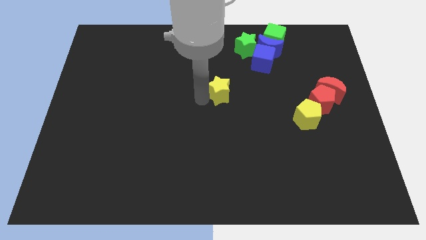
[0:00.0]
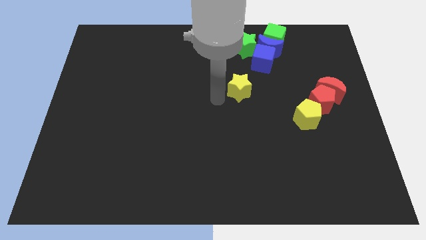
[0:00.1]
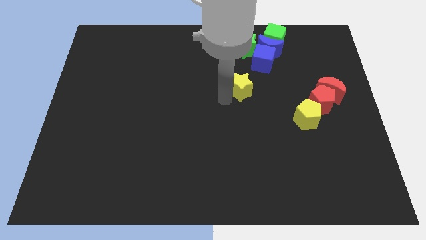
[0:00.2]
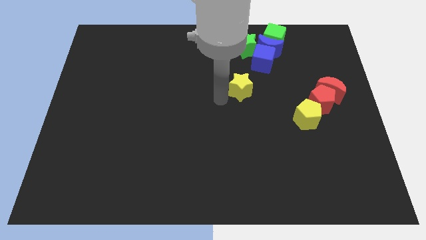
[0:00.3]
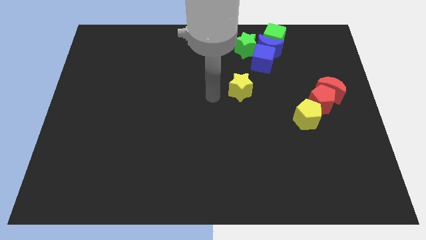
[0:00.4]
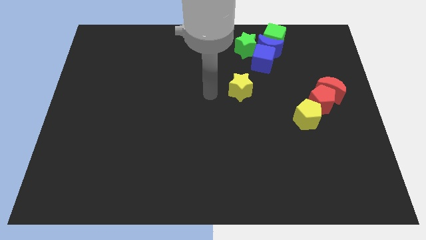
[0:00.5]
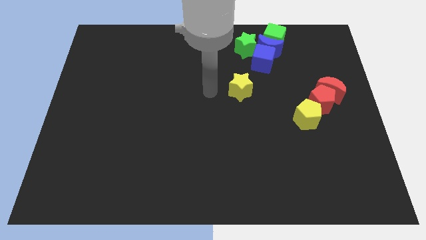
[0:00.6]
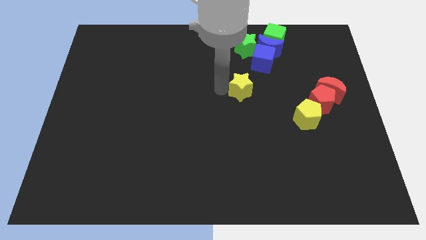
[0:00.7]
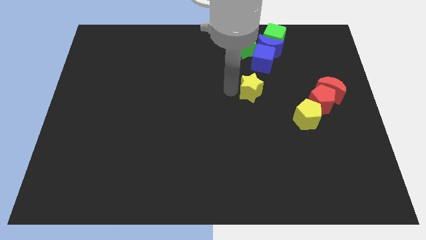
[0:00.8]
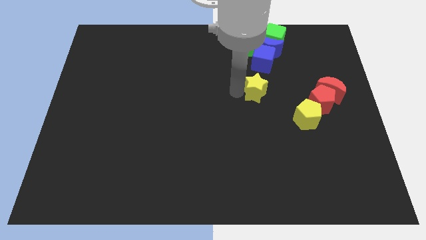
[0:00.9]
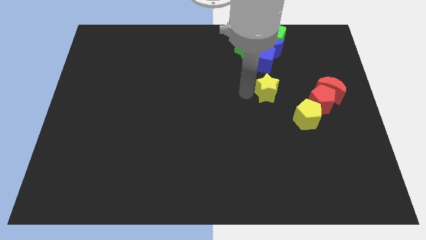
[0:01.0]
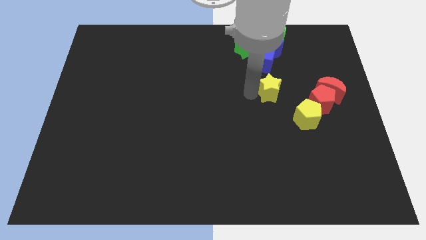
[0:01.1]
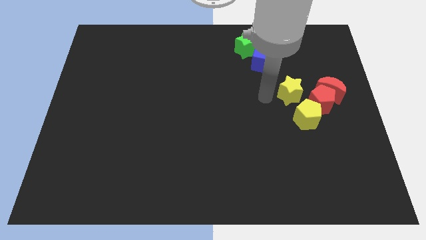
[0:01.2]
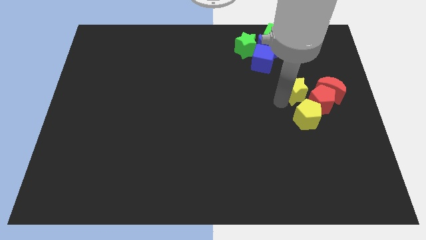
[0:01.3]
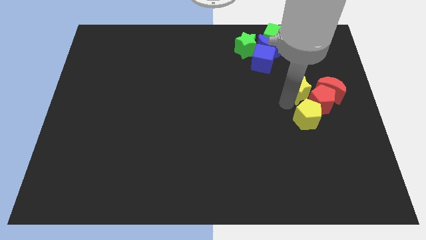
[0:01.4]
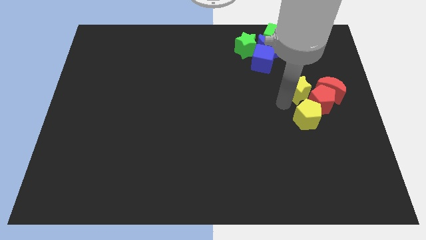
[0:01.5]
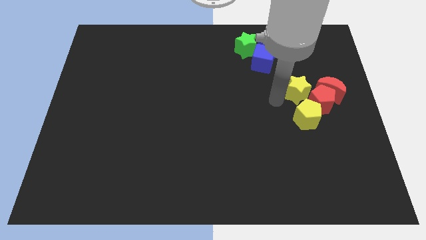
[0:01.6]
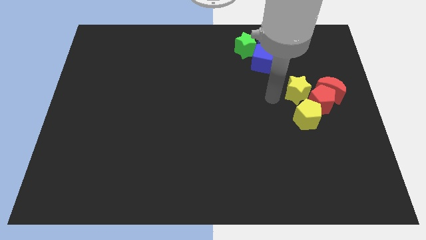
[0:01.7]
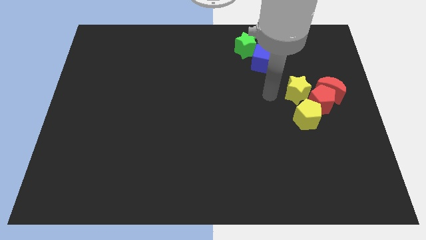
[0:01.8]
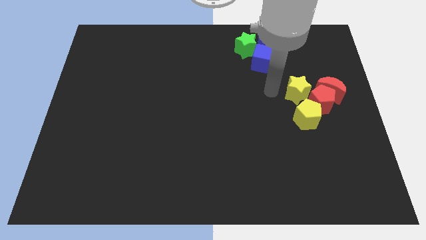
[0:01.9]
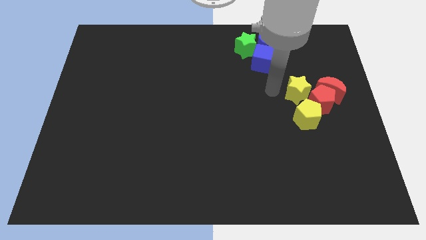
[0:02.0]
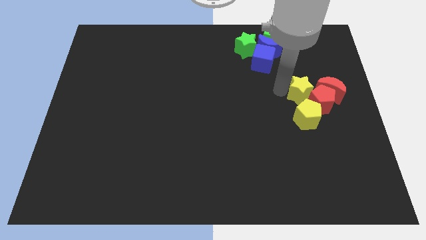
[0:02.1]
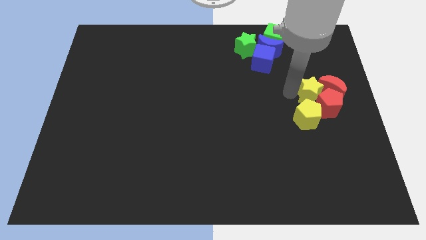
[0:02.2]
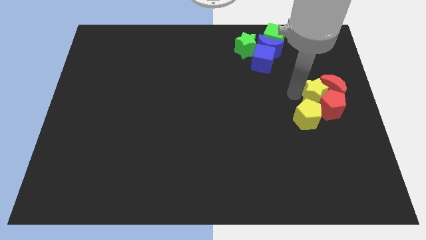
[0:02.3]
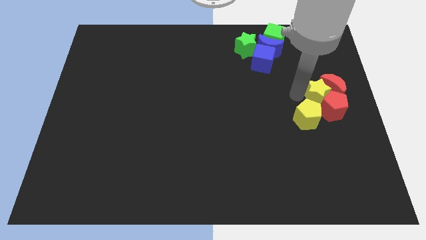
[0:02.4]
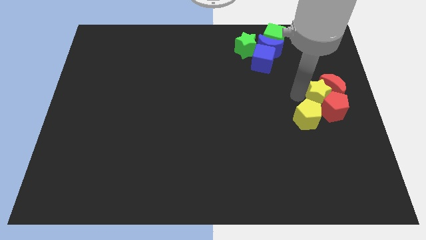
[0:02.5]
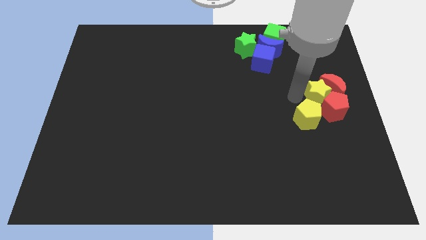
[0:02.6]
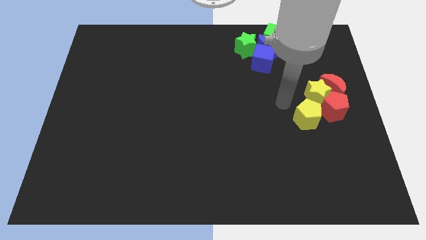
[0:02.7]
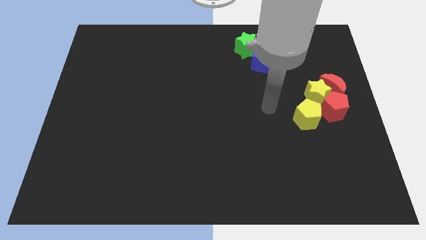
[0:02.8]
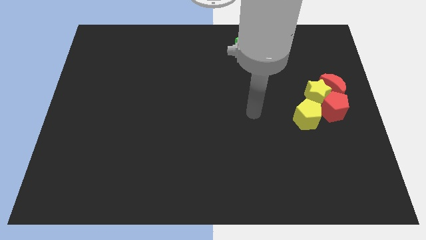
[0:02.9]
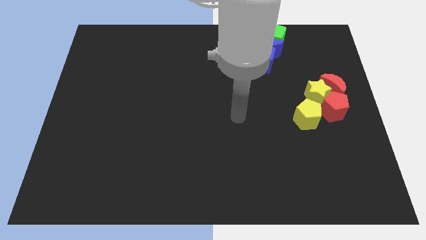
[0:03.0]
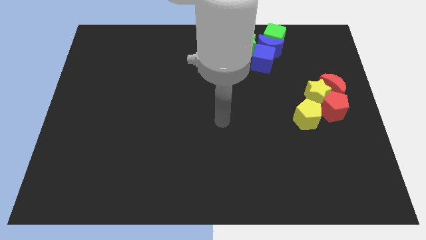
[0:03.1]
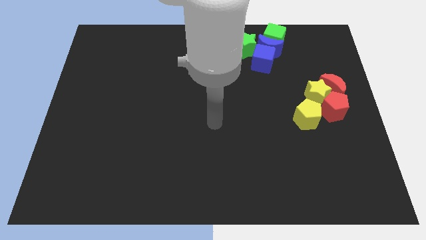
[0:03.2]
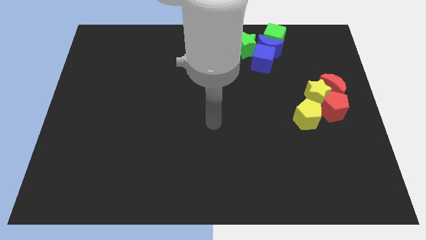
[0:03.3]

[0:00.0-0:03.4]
move yellow star to the left of red moon

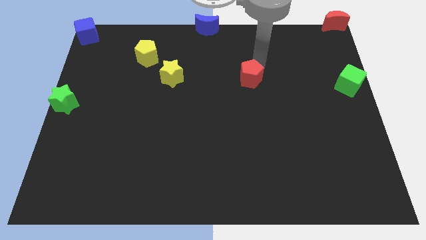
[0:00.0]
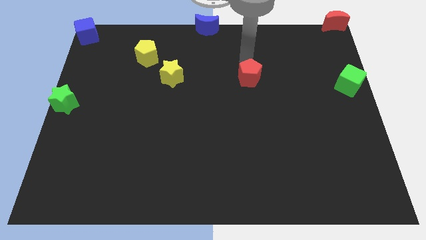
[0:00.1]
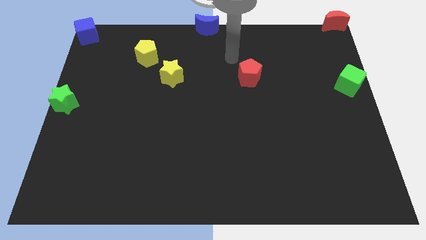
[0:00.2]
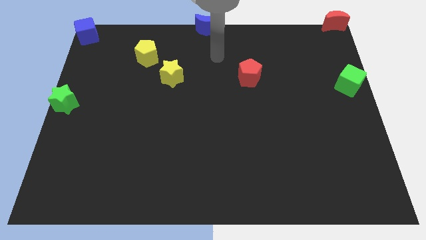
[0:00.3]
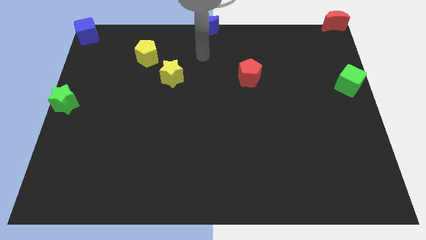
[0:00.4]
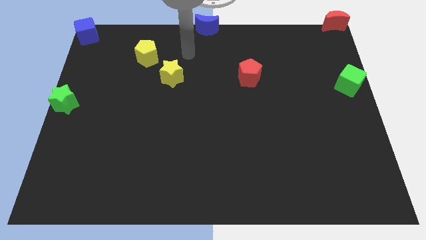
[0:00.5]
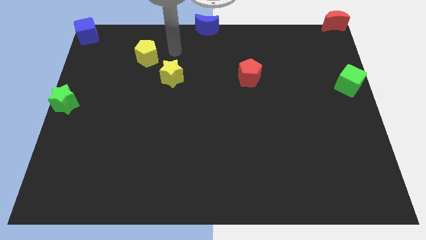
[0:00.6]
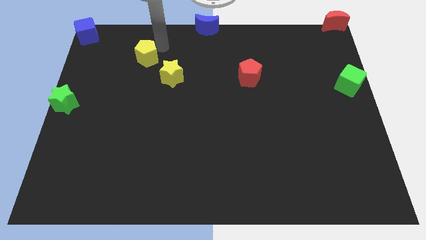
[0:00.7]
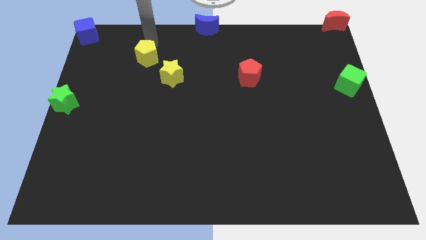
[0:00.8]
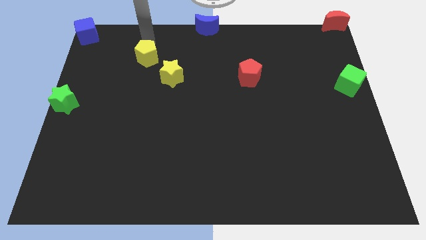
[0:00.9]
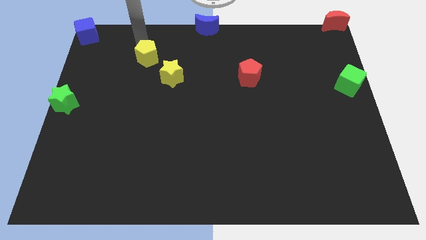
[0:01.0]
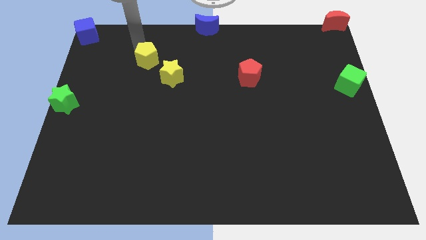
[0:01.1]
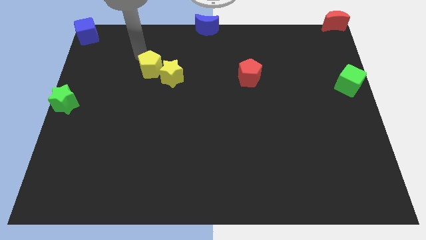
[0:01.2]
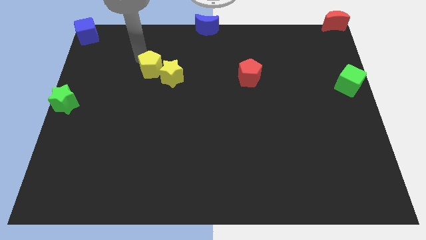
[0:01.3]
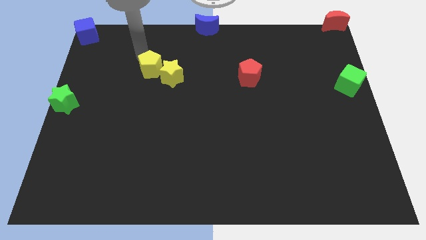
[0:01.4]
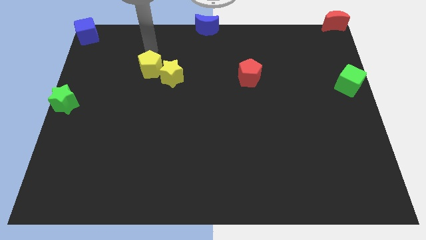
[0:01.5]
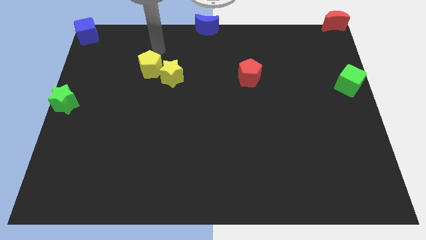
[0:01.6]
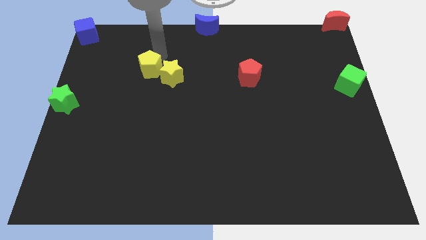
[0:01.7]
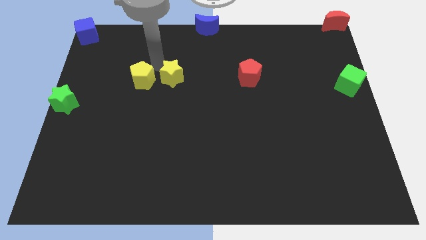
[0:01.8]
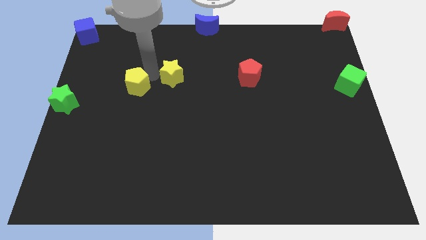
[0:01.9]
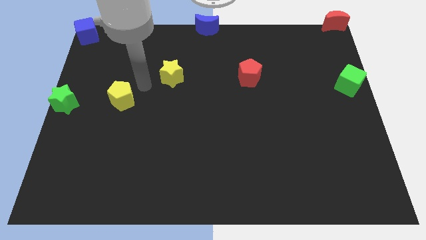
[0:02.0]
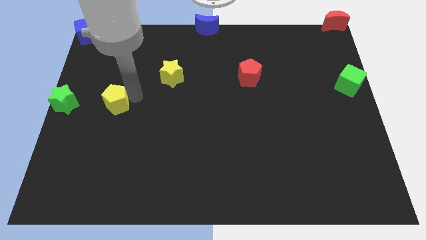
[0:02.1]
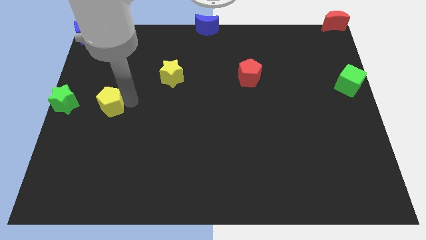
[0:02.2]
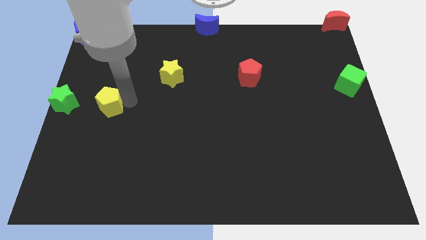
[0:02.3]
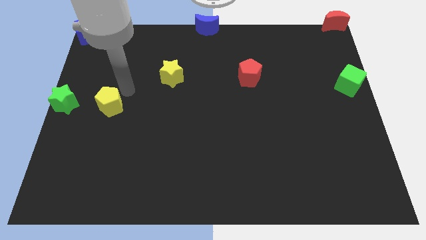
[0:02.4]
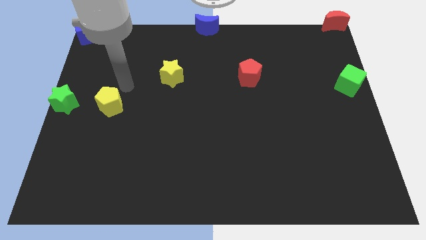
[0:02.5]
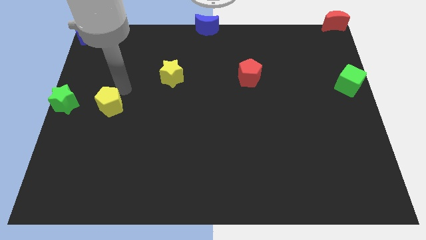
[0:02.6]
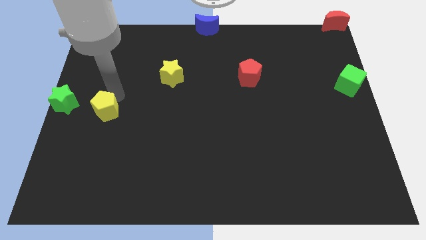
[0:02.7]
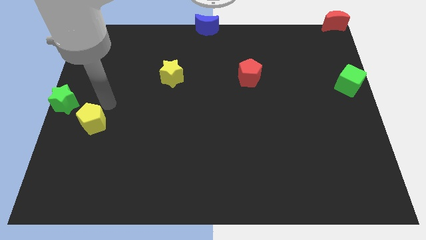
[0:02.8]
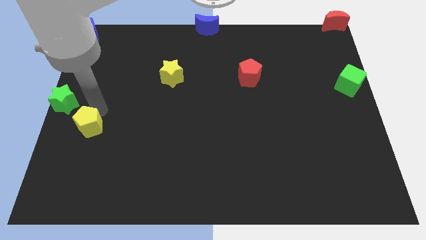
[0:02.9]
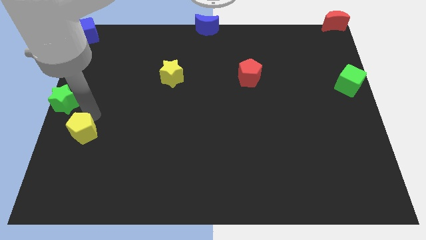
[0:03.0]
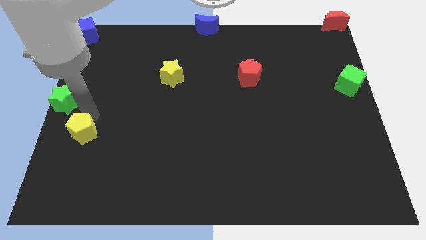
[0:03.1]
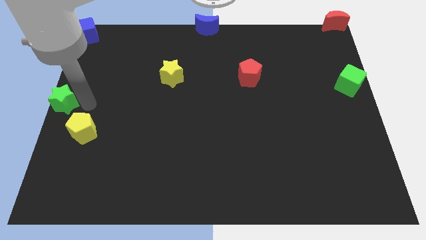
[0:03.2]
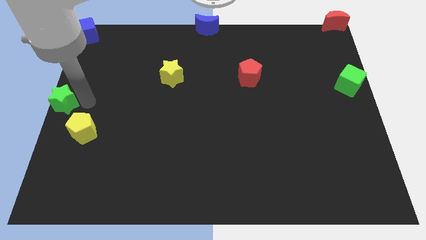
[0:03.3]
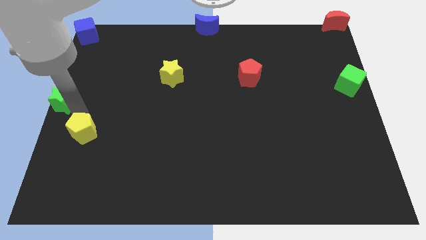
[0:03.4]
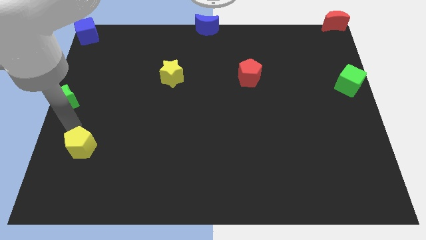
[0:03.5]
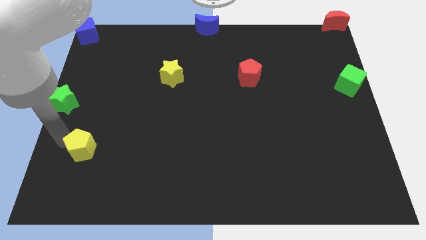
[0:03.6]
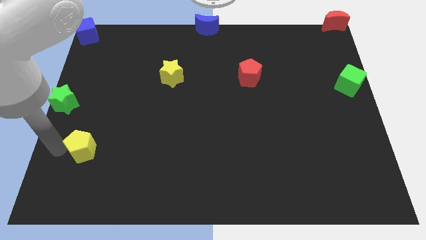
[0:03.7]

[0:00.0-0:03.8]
push the yellow pentagon diagnol to the green star

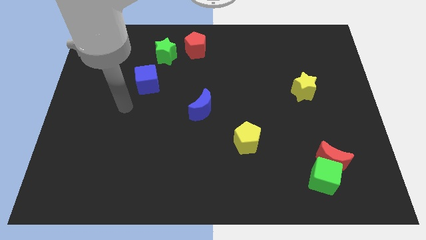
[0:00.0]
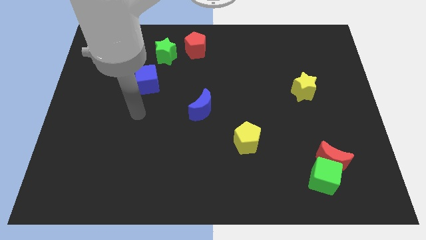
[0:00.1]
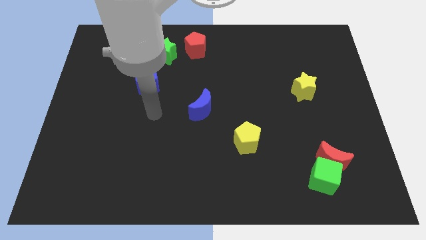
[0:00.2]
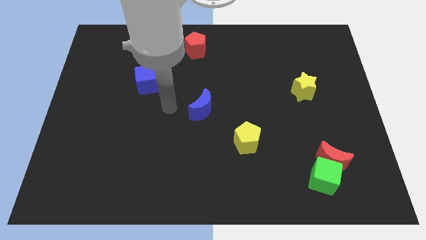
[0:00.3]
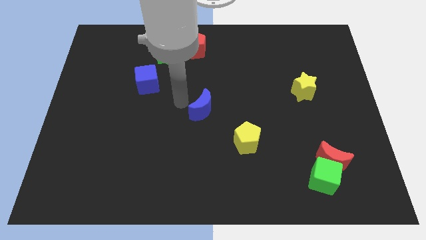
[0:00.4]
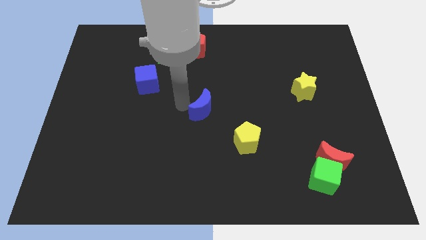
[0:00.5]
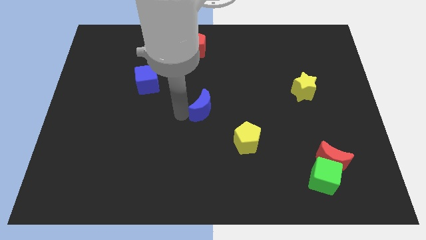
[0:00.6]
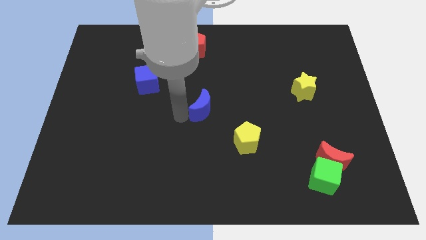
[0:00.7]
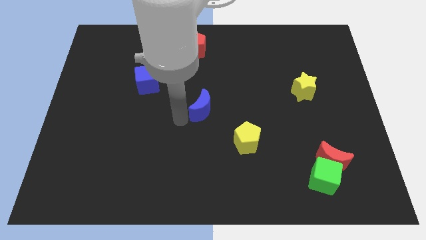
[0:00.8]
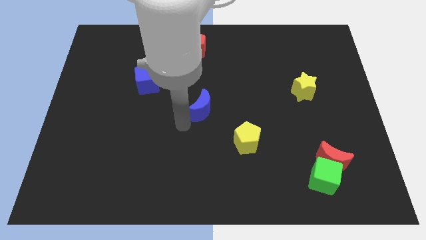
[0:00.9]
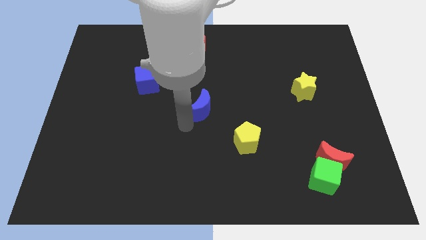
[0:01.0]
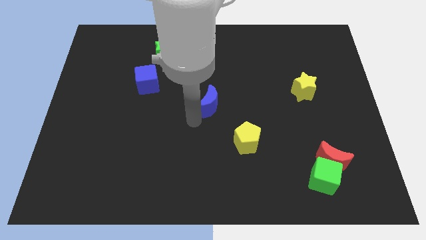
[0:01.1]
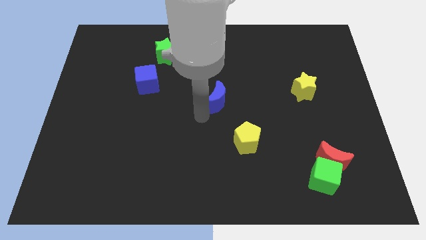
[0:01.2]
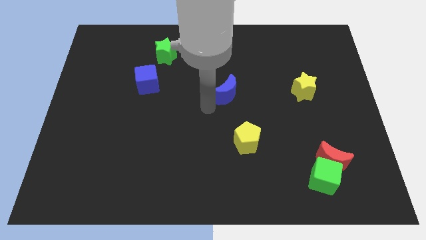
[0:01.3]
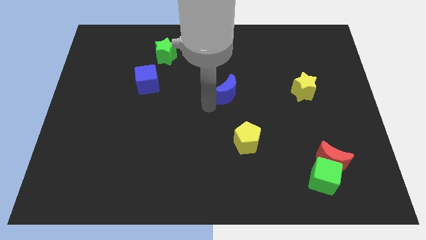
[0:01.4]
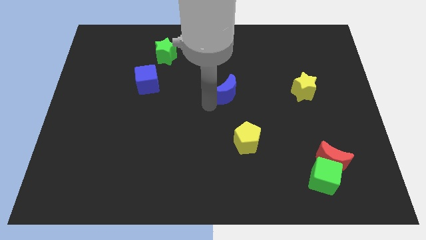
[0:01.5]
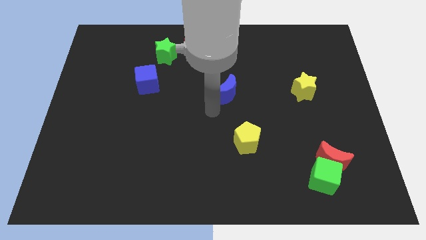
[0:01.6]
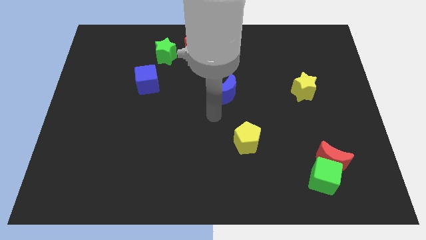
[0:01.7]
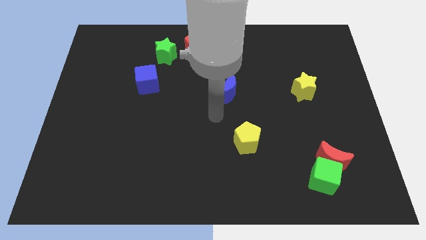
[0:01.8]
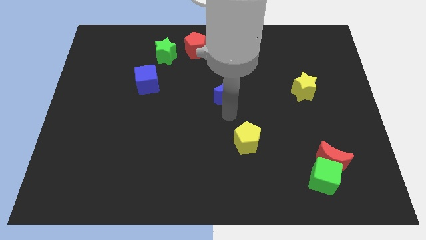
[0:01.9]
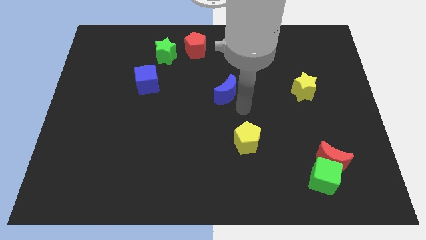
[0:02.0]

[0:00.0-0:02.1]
push the blue moon to the center of the board
